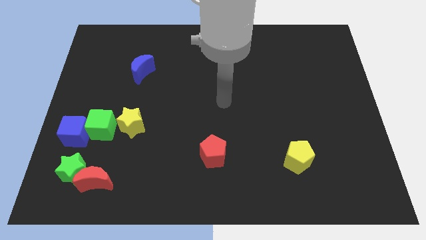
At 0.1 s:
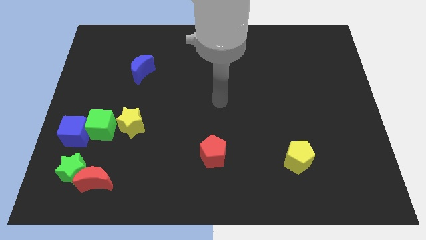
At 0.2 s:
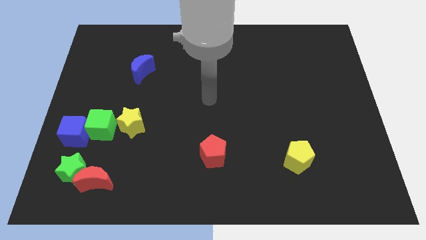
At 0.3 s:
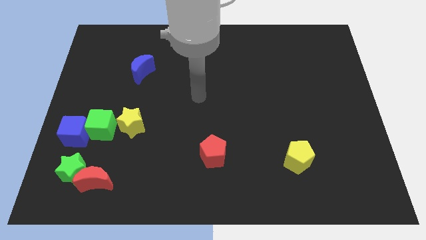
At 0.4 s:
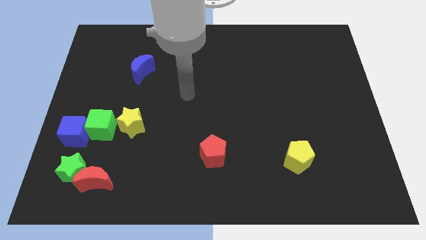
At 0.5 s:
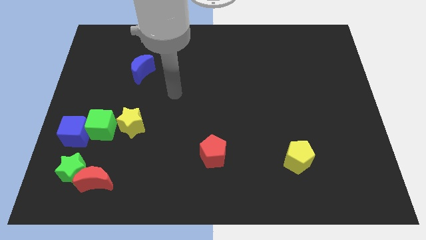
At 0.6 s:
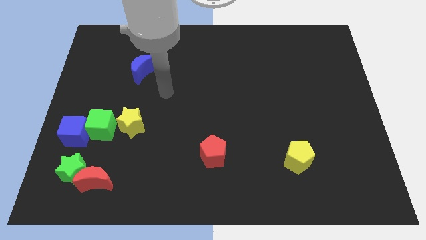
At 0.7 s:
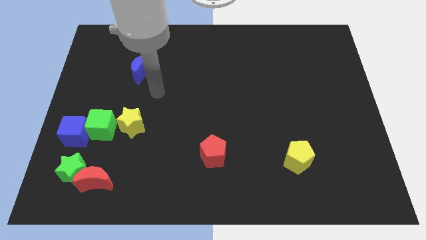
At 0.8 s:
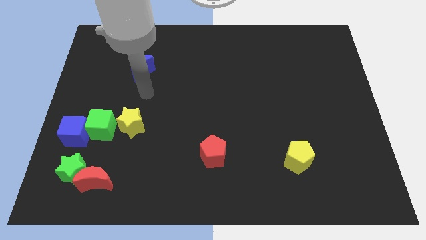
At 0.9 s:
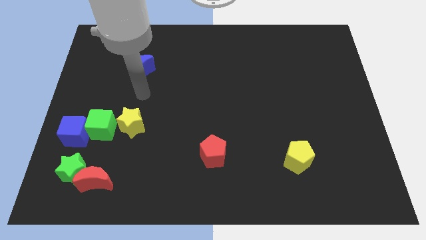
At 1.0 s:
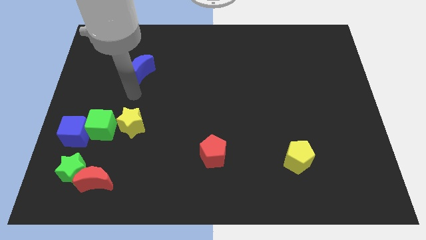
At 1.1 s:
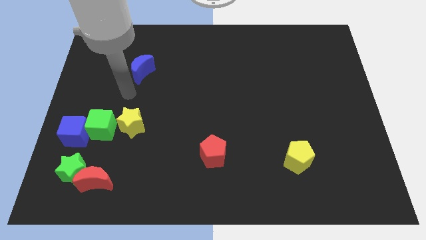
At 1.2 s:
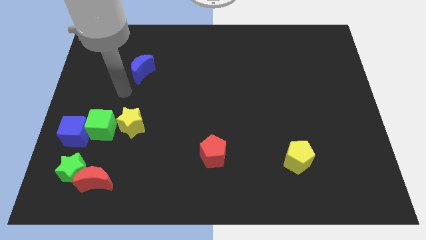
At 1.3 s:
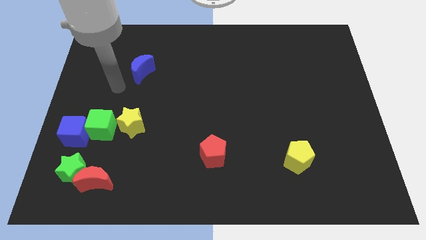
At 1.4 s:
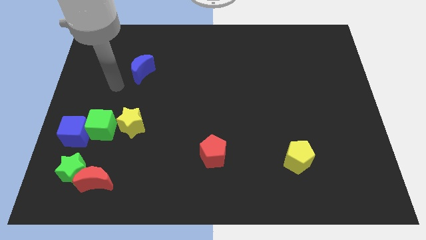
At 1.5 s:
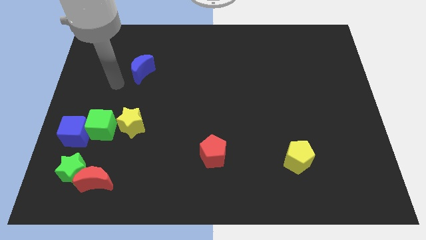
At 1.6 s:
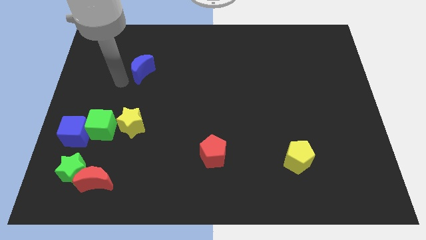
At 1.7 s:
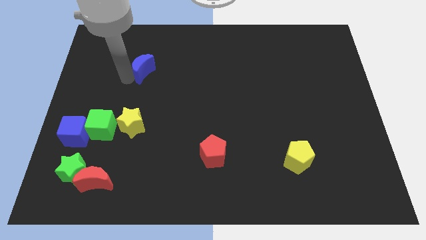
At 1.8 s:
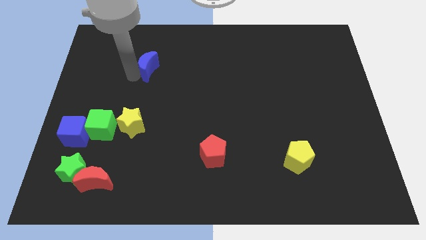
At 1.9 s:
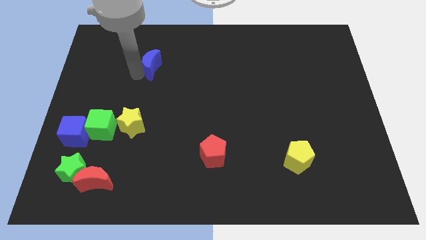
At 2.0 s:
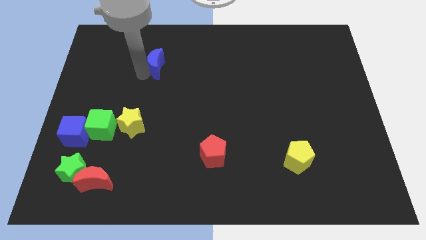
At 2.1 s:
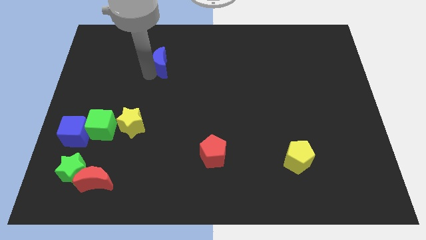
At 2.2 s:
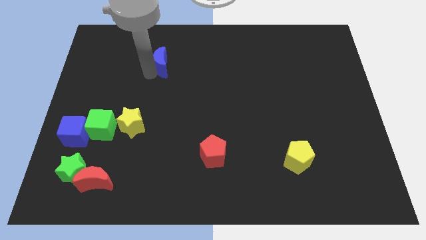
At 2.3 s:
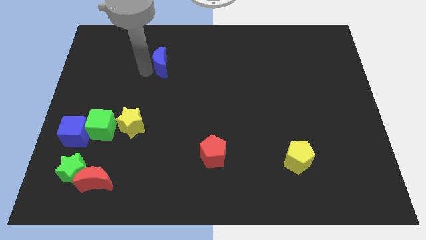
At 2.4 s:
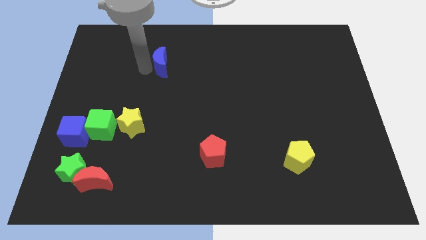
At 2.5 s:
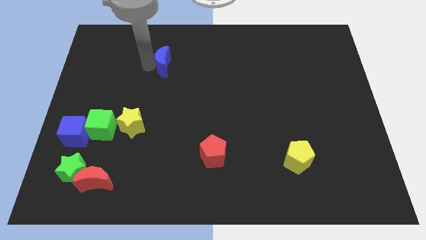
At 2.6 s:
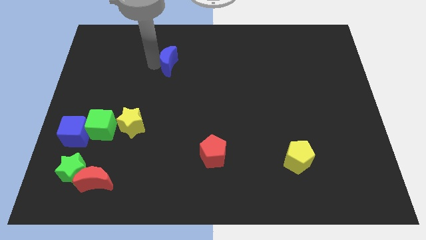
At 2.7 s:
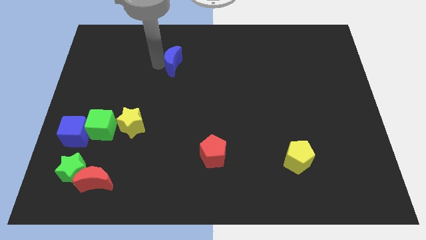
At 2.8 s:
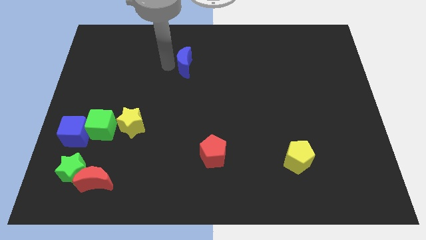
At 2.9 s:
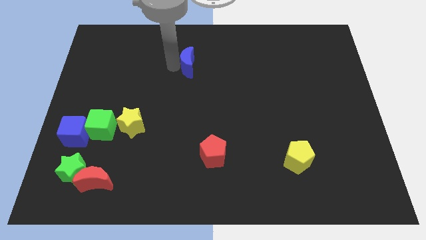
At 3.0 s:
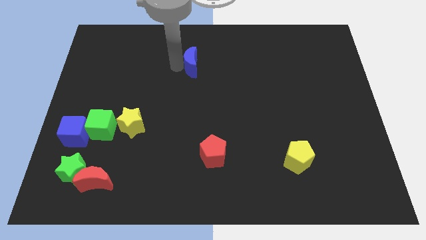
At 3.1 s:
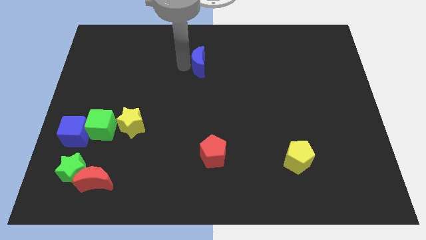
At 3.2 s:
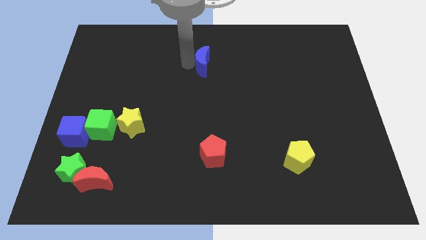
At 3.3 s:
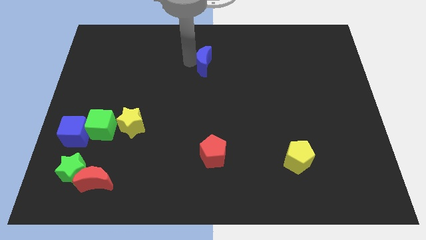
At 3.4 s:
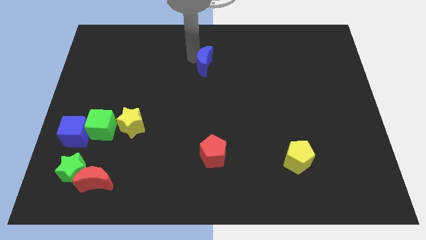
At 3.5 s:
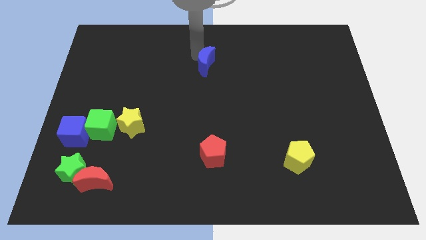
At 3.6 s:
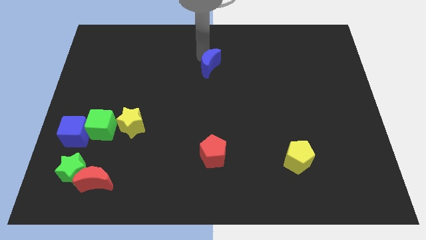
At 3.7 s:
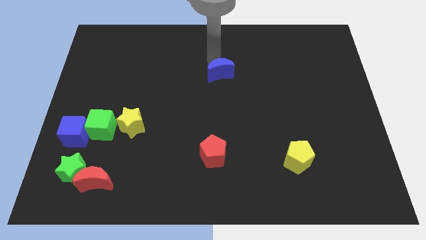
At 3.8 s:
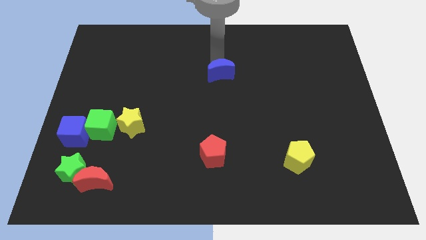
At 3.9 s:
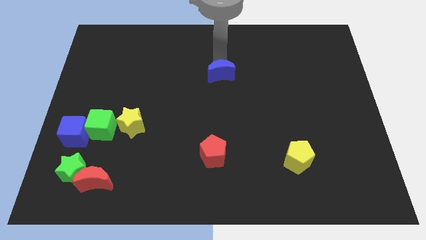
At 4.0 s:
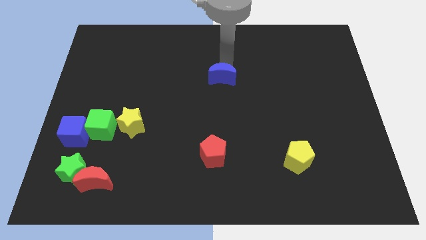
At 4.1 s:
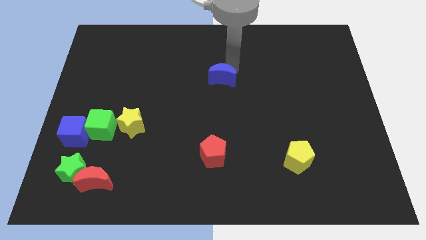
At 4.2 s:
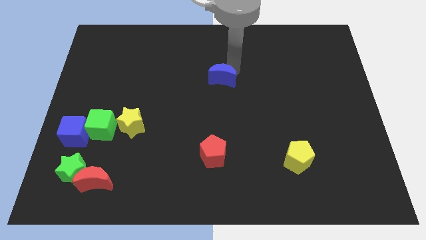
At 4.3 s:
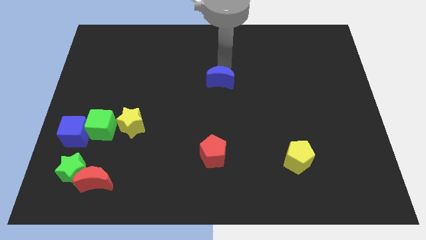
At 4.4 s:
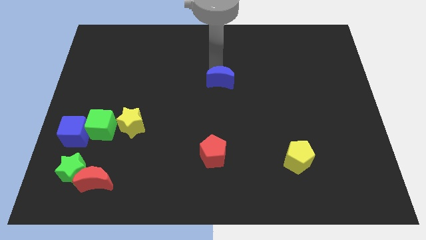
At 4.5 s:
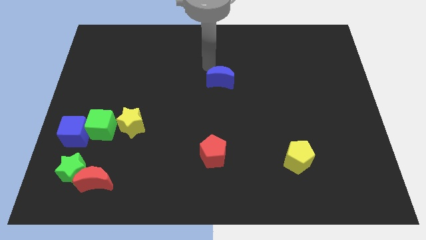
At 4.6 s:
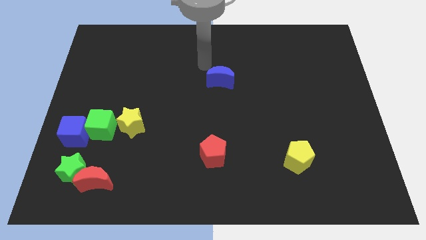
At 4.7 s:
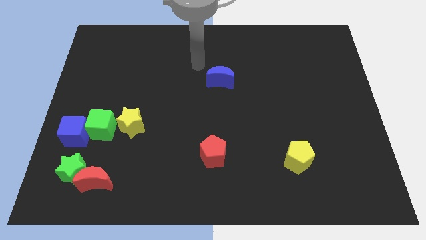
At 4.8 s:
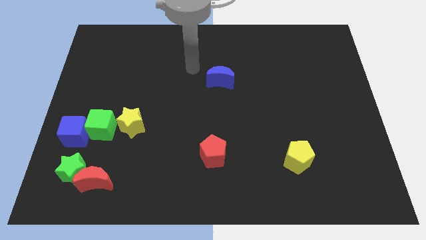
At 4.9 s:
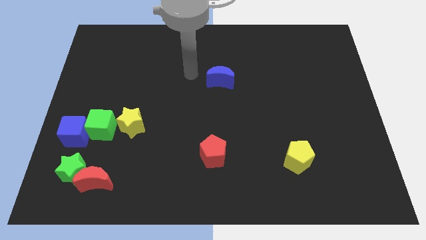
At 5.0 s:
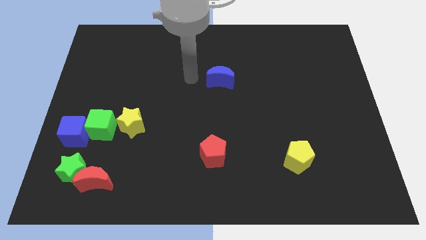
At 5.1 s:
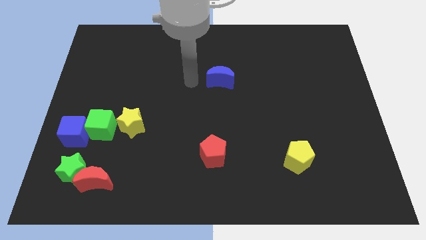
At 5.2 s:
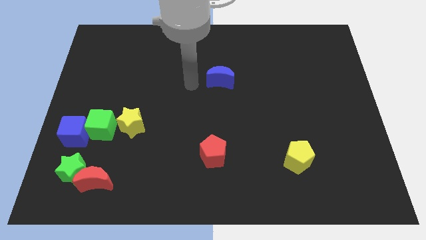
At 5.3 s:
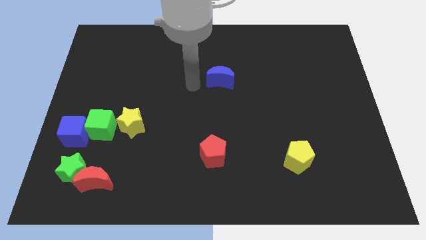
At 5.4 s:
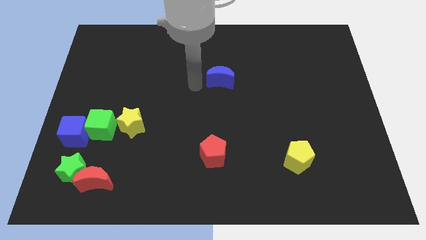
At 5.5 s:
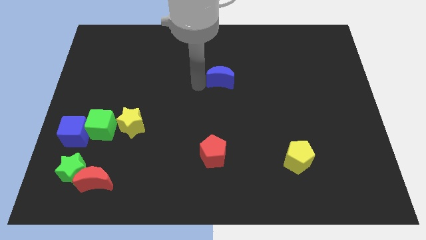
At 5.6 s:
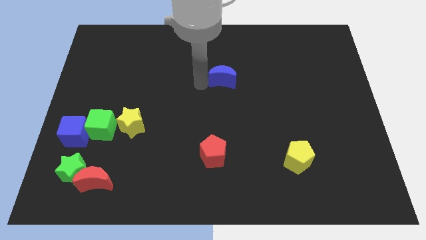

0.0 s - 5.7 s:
move the blue crescent slightly towards the center of the board

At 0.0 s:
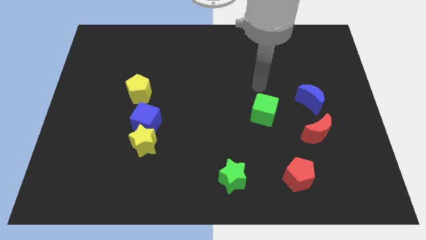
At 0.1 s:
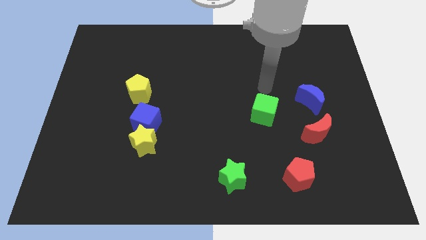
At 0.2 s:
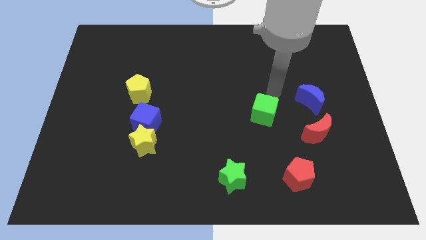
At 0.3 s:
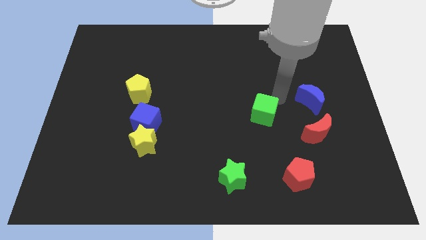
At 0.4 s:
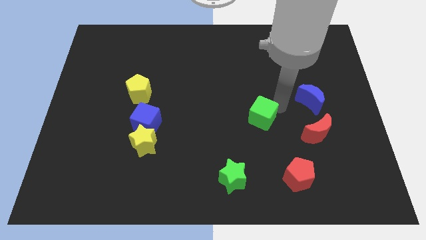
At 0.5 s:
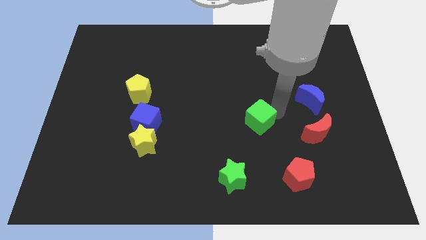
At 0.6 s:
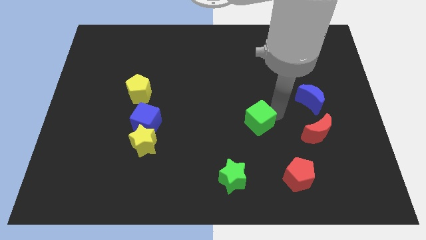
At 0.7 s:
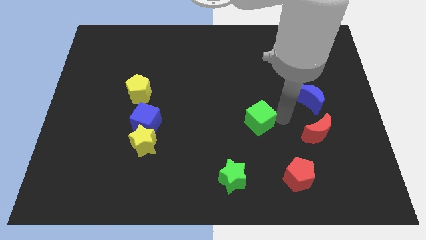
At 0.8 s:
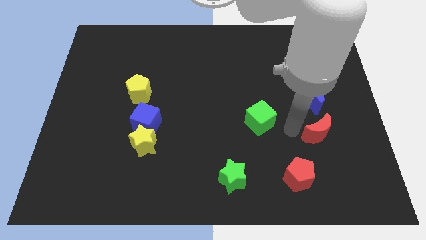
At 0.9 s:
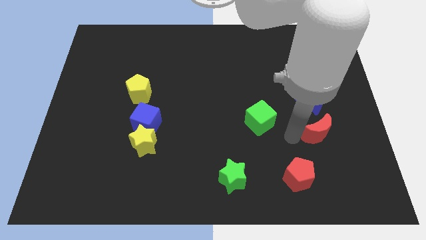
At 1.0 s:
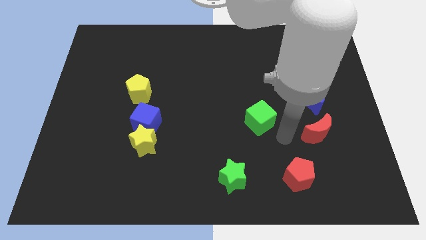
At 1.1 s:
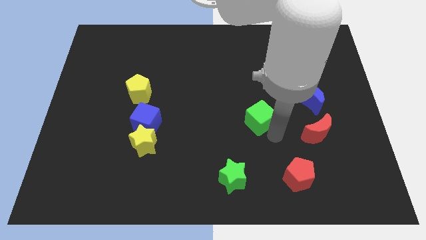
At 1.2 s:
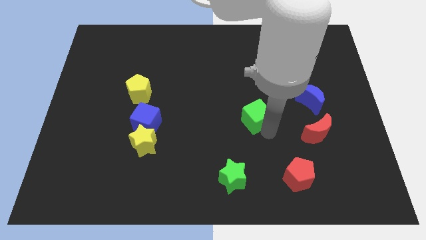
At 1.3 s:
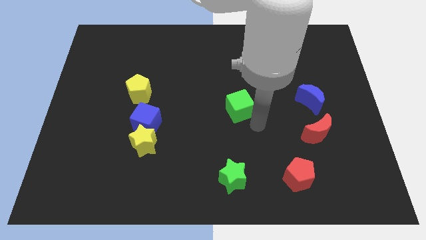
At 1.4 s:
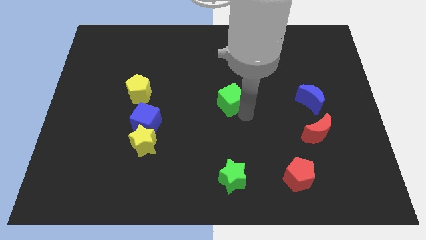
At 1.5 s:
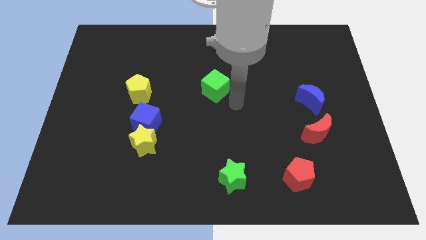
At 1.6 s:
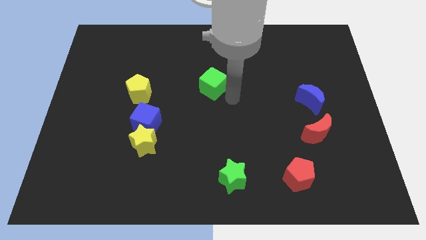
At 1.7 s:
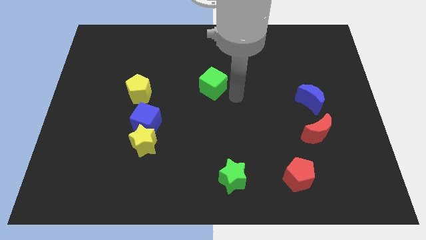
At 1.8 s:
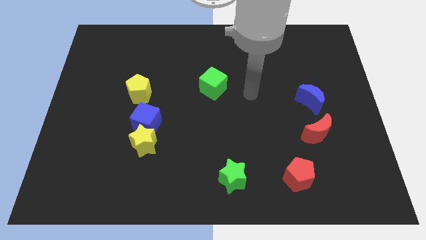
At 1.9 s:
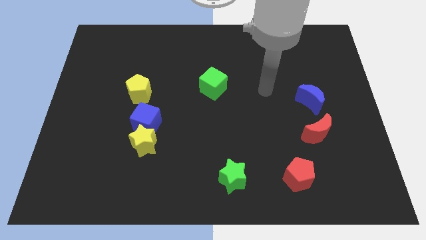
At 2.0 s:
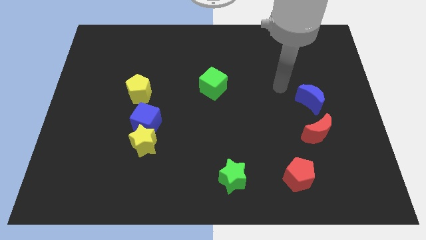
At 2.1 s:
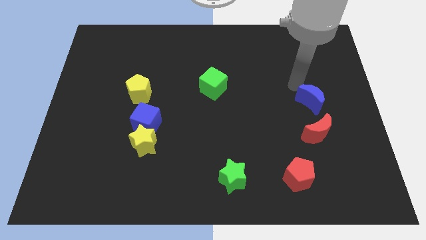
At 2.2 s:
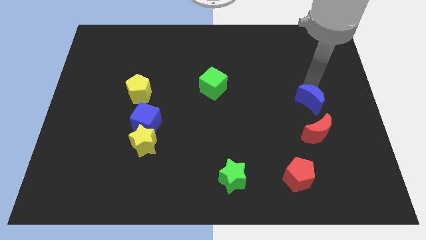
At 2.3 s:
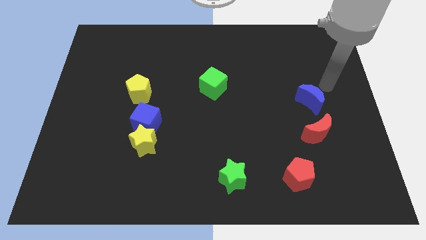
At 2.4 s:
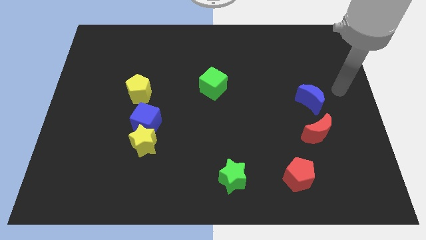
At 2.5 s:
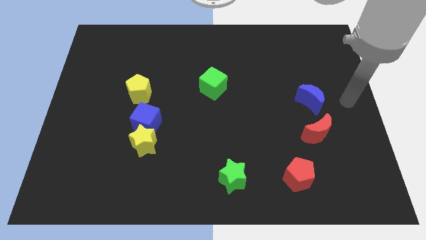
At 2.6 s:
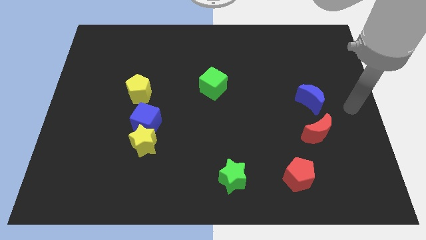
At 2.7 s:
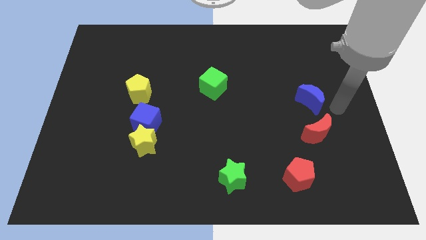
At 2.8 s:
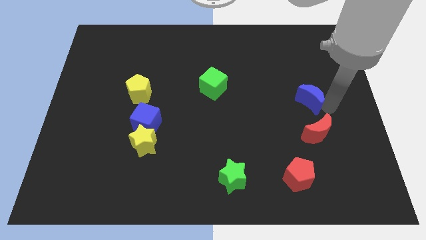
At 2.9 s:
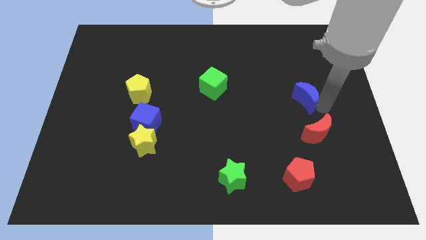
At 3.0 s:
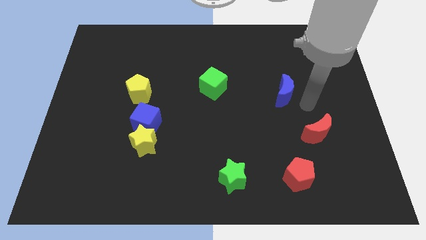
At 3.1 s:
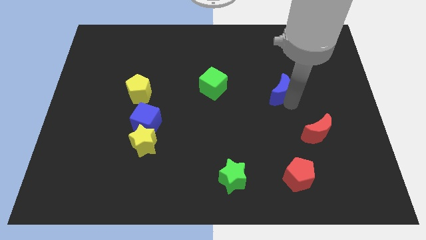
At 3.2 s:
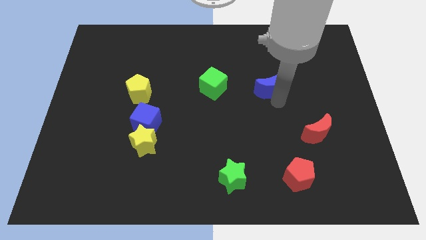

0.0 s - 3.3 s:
move the blue moon to the right of the green cube
